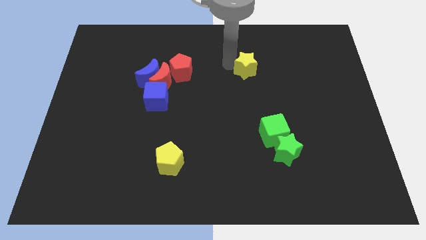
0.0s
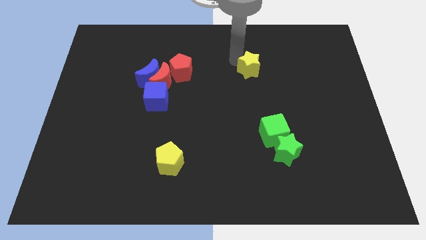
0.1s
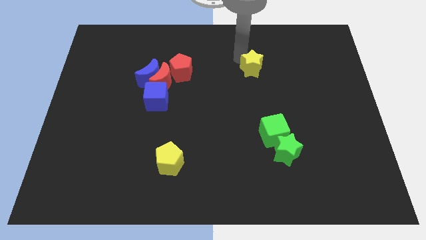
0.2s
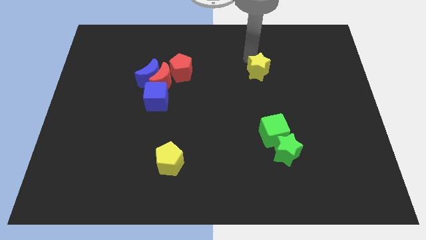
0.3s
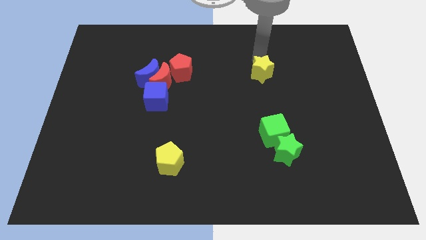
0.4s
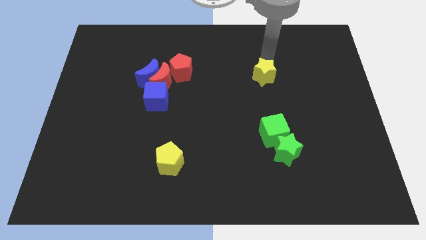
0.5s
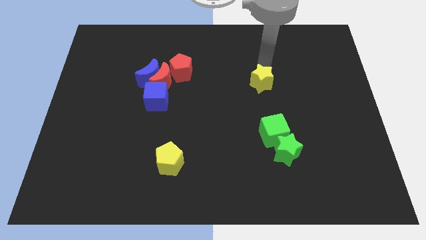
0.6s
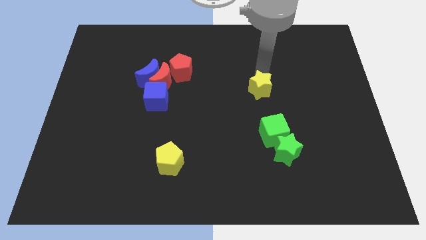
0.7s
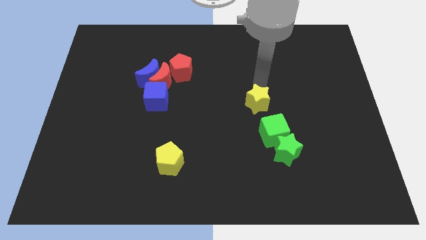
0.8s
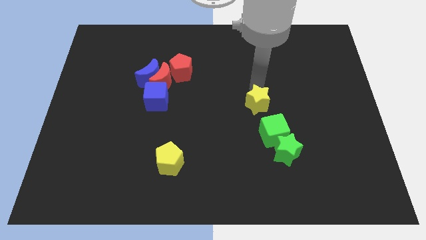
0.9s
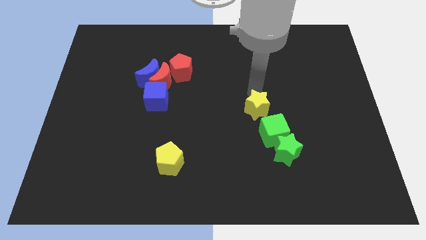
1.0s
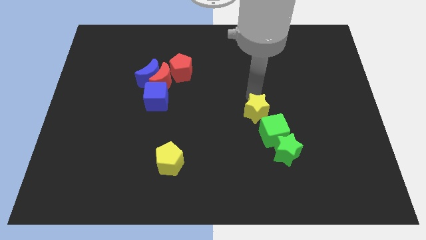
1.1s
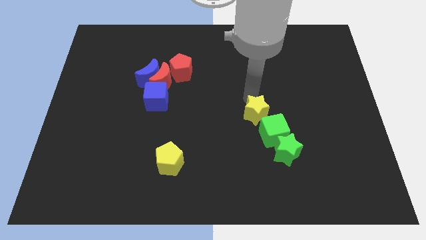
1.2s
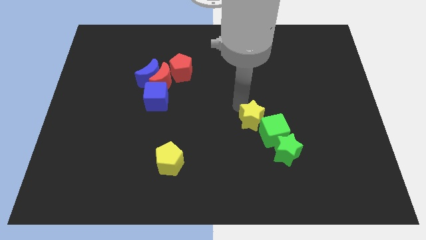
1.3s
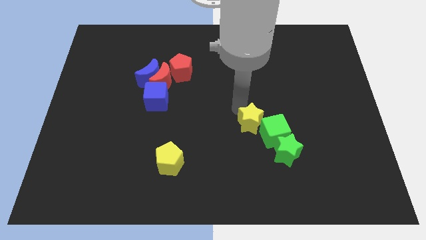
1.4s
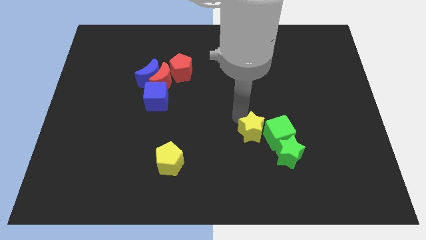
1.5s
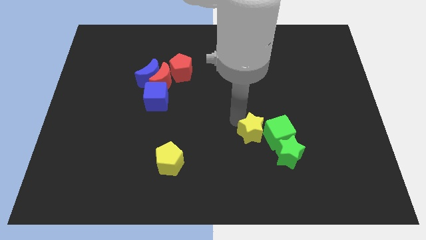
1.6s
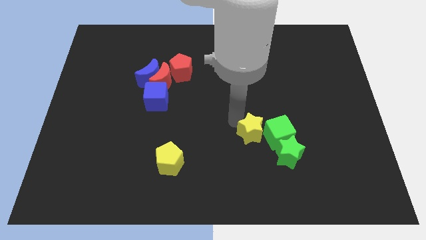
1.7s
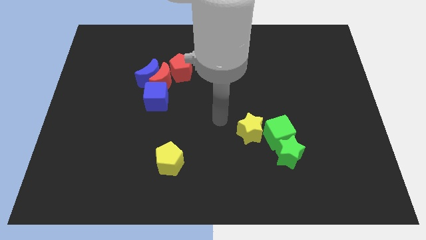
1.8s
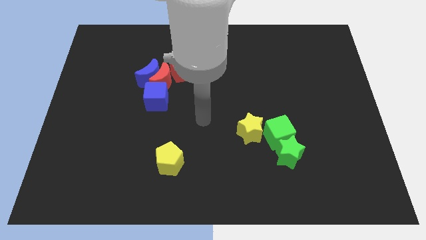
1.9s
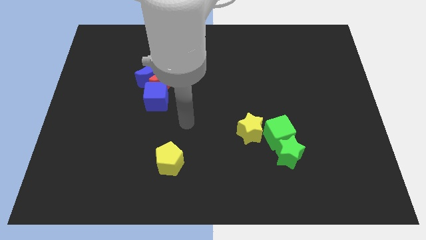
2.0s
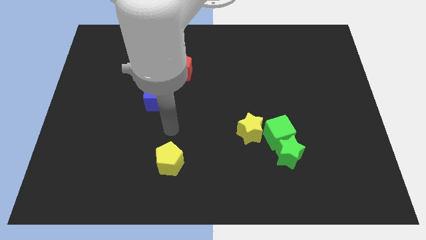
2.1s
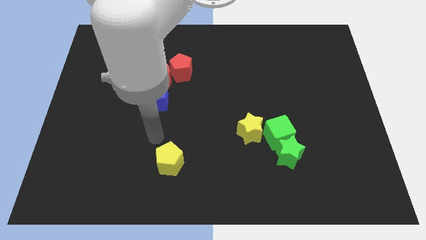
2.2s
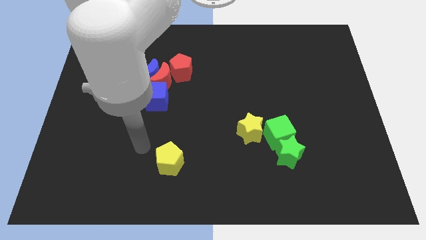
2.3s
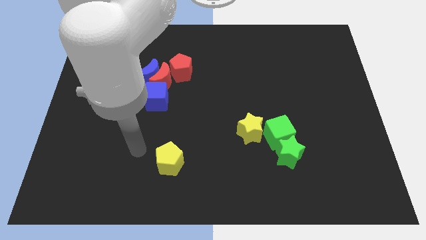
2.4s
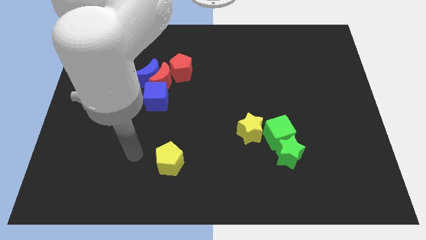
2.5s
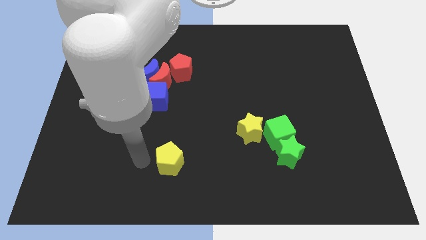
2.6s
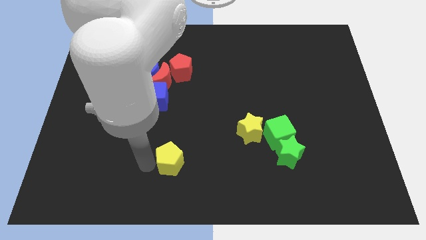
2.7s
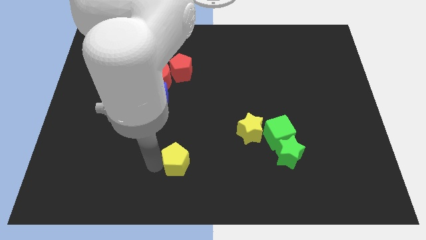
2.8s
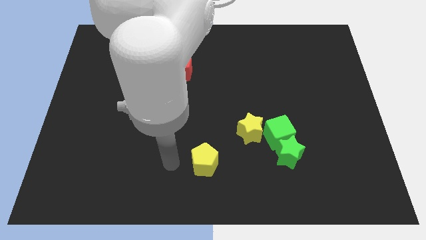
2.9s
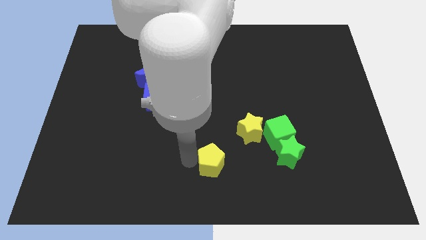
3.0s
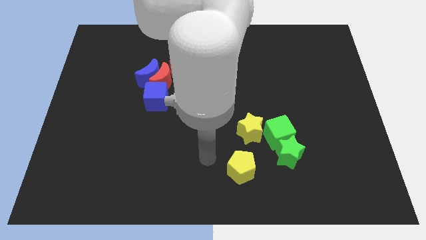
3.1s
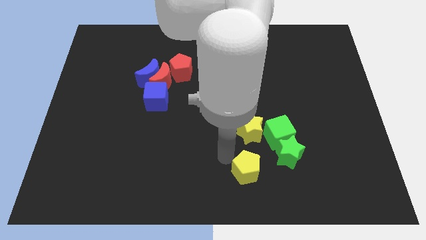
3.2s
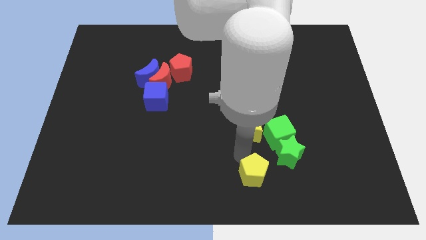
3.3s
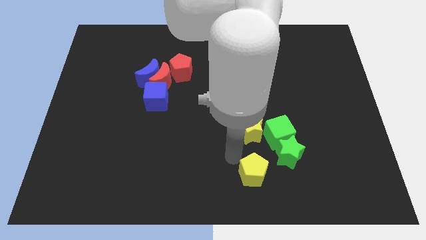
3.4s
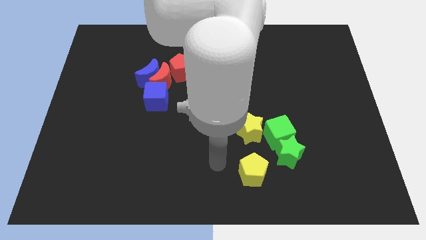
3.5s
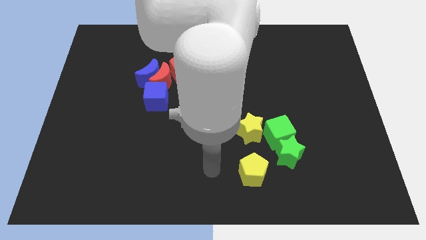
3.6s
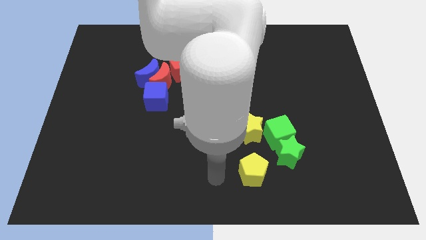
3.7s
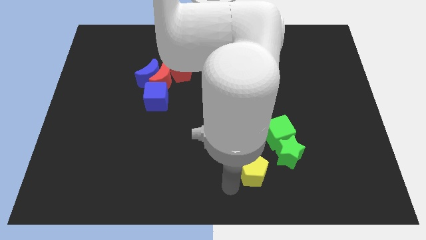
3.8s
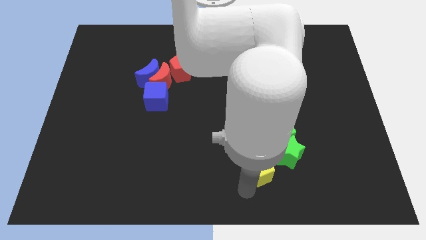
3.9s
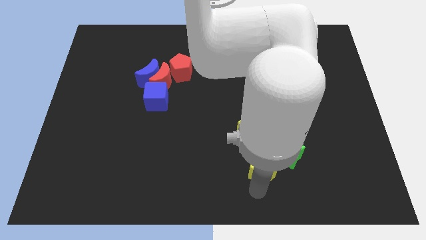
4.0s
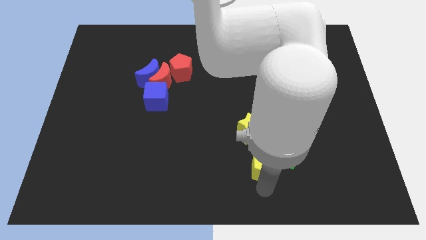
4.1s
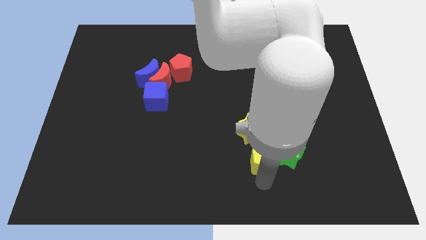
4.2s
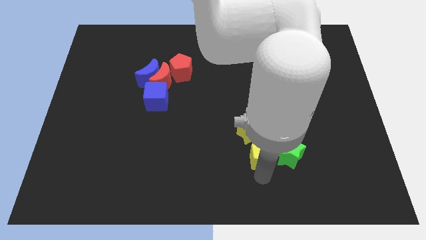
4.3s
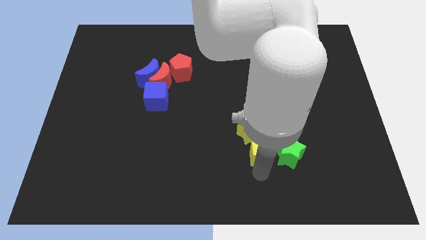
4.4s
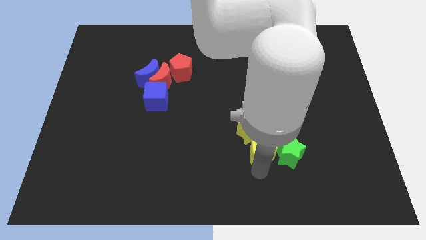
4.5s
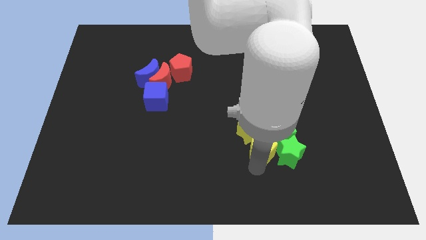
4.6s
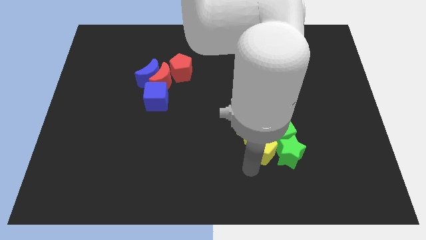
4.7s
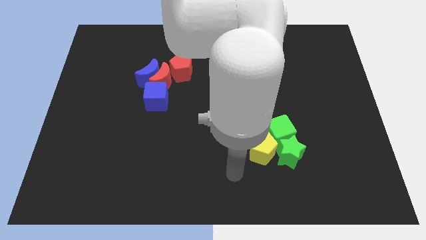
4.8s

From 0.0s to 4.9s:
group up yellow and green blocks

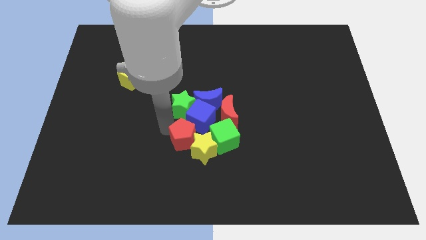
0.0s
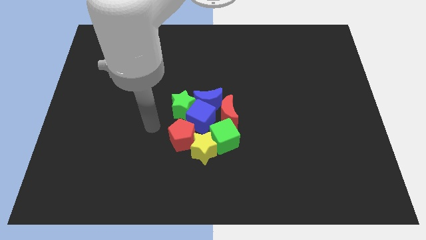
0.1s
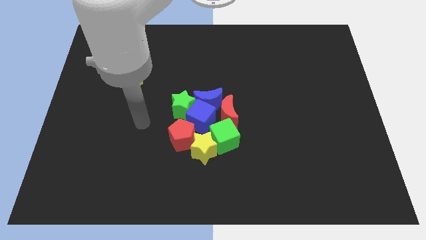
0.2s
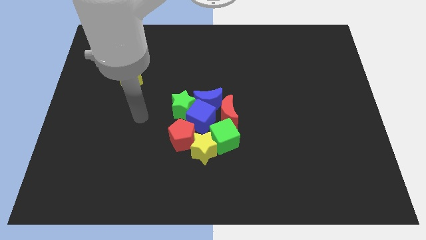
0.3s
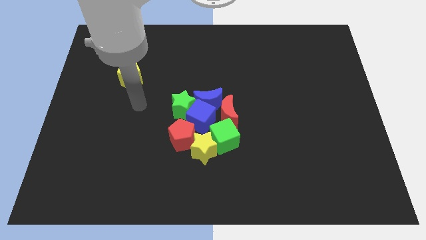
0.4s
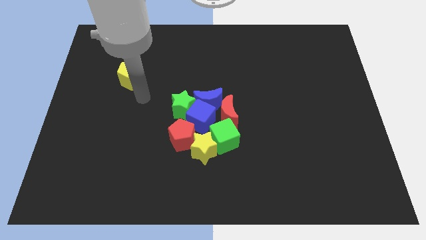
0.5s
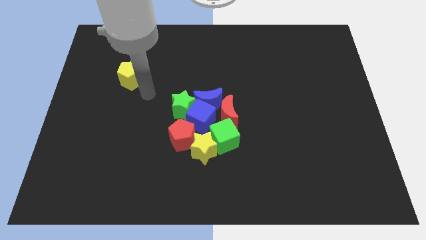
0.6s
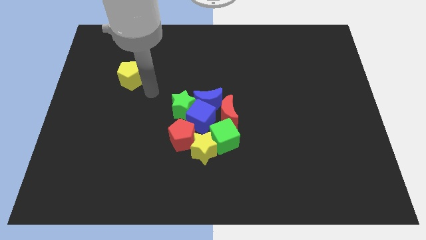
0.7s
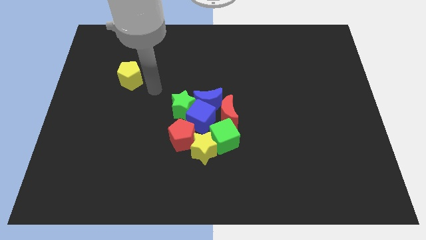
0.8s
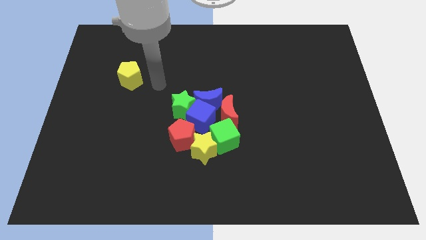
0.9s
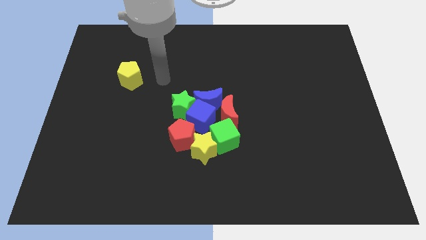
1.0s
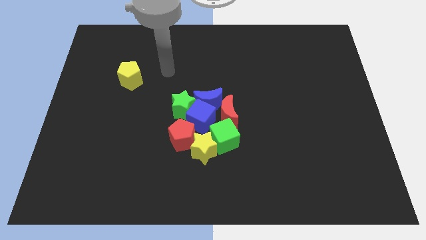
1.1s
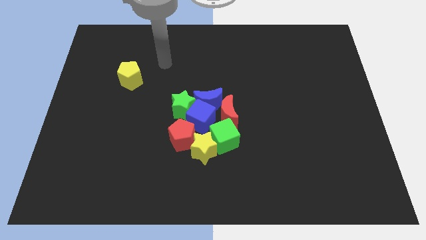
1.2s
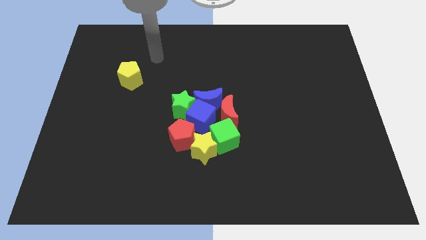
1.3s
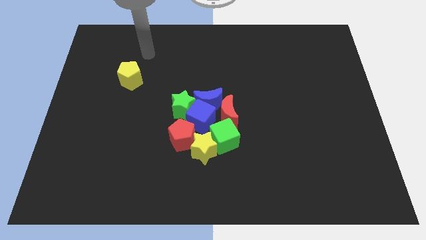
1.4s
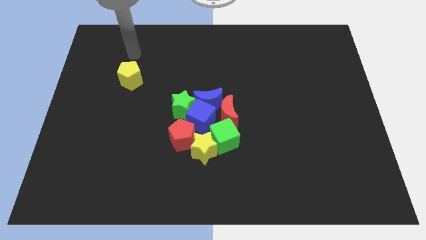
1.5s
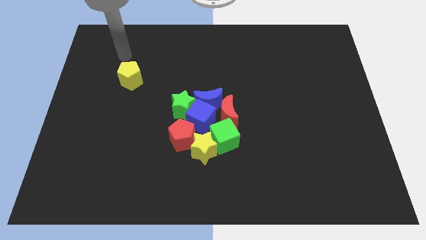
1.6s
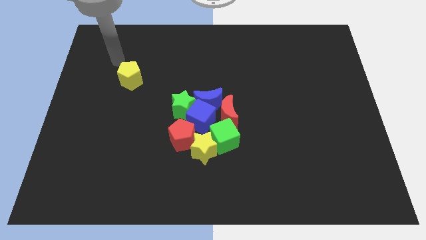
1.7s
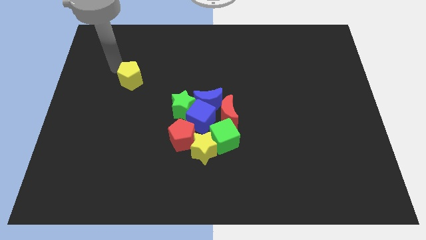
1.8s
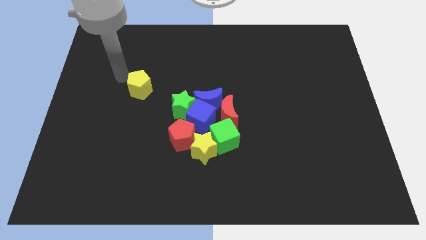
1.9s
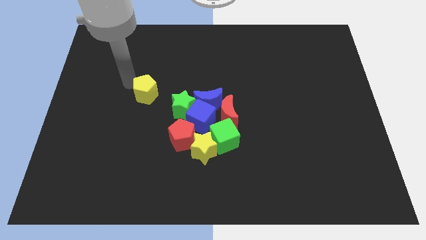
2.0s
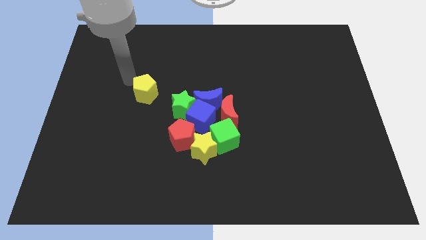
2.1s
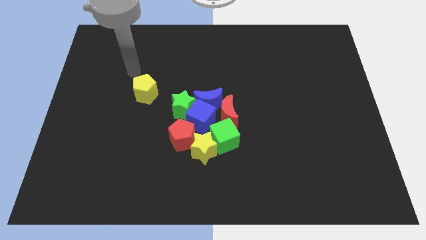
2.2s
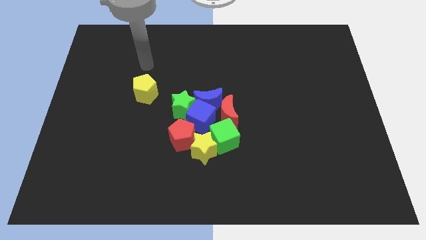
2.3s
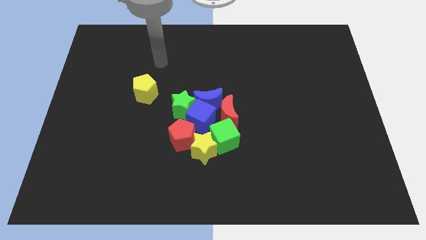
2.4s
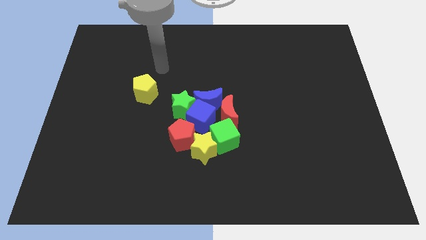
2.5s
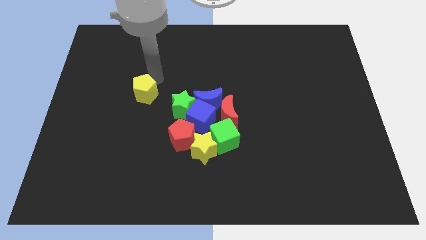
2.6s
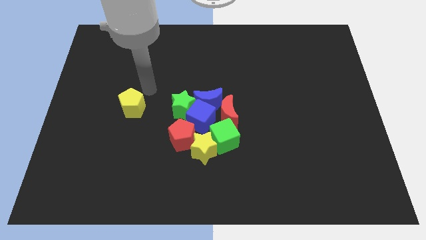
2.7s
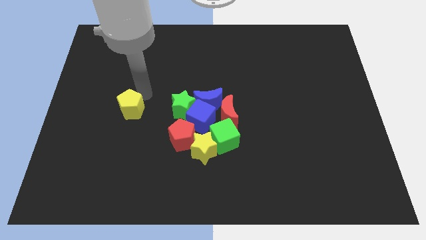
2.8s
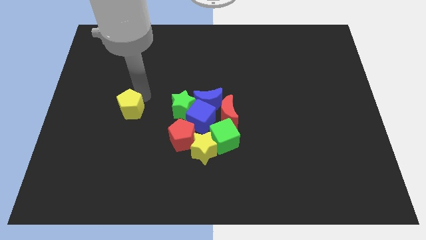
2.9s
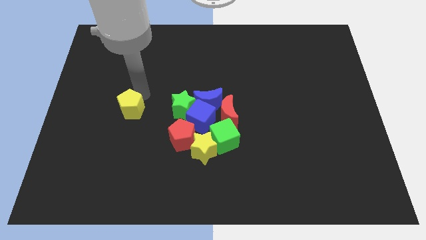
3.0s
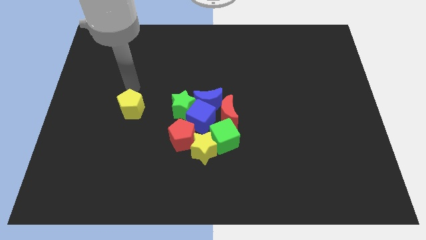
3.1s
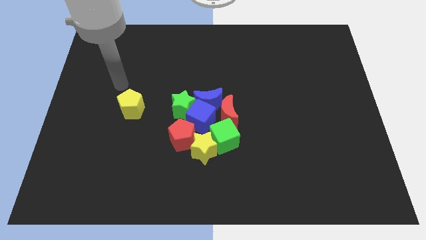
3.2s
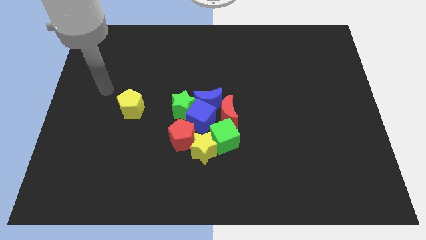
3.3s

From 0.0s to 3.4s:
place the yellow pentagon left to the green star

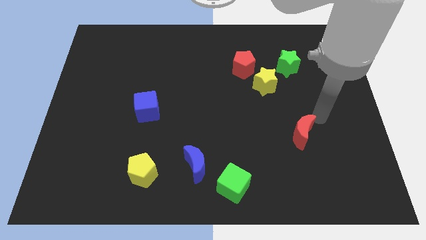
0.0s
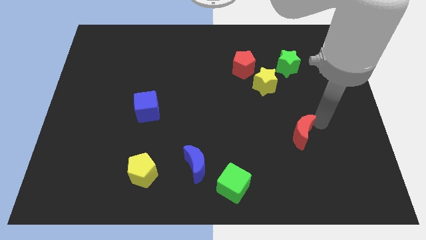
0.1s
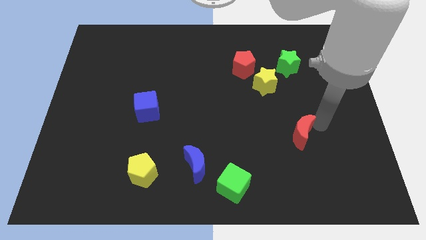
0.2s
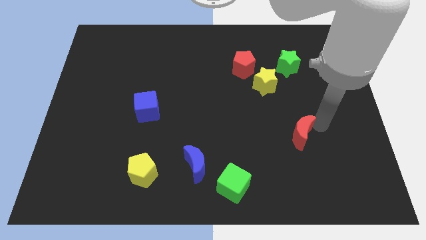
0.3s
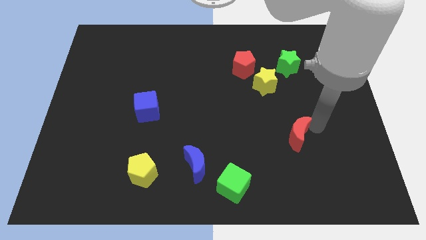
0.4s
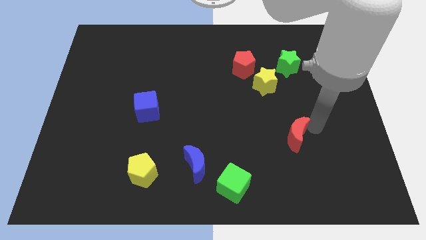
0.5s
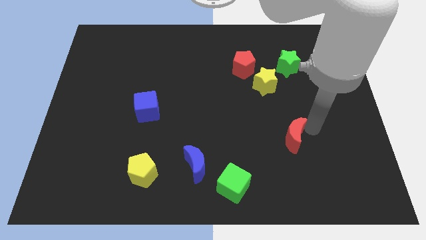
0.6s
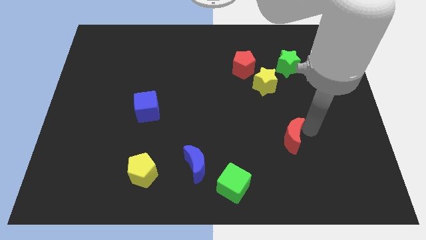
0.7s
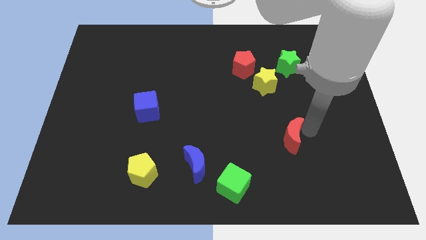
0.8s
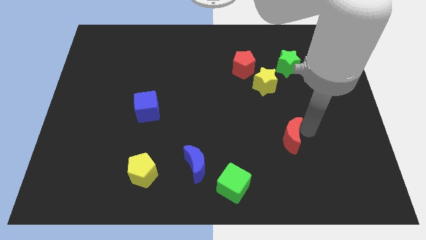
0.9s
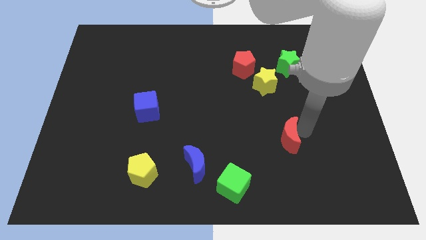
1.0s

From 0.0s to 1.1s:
move the red moon slightly to the left
